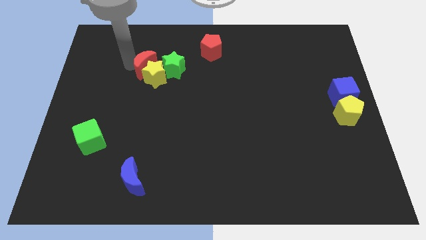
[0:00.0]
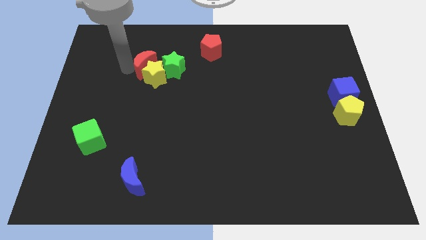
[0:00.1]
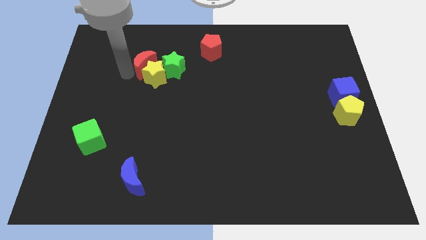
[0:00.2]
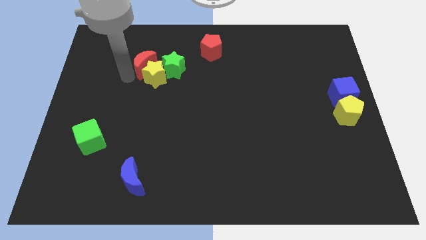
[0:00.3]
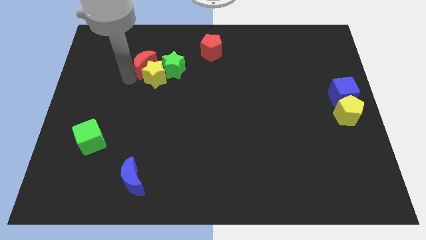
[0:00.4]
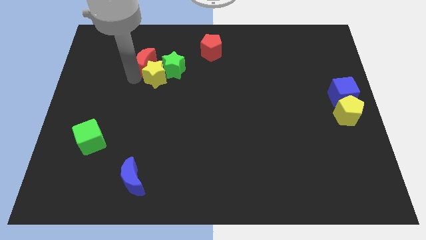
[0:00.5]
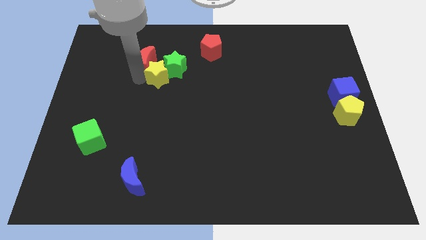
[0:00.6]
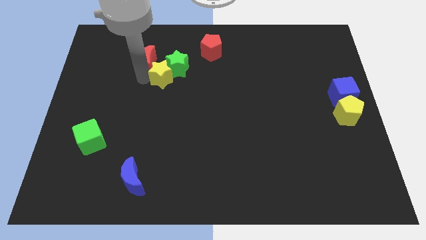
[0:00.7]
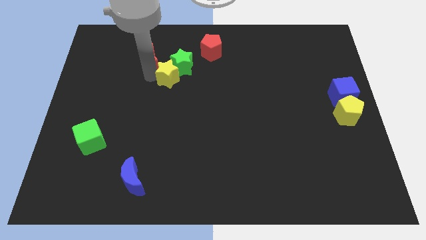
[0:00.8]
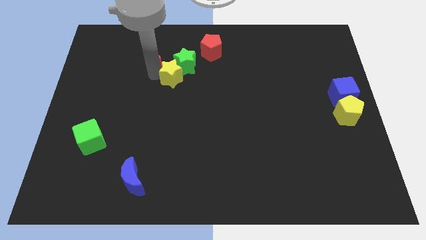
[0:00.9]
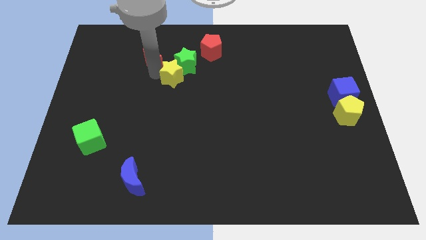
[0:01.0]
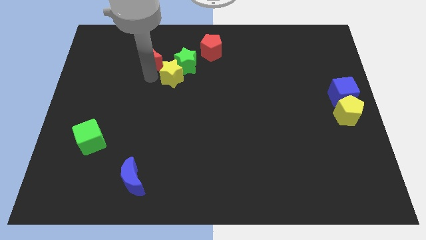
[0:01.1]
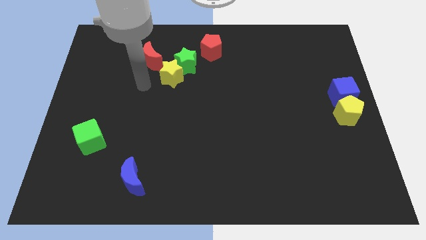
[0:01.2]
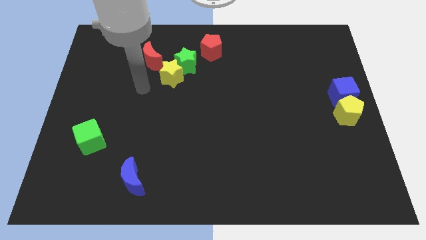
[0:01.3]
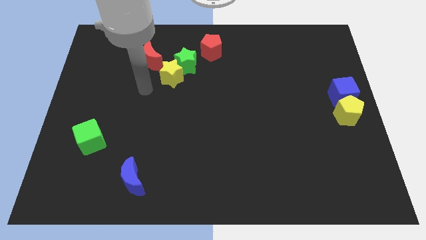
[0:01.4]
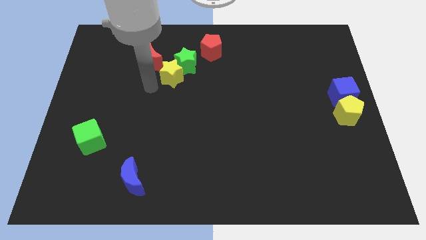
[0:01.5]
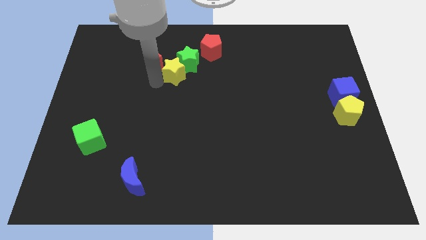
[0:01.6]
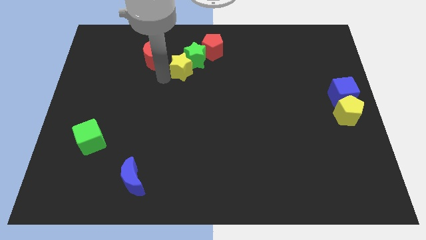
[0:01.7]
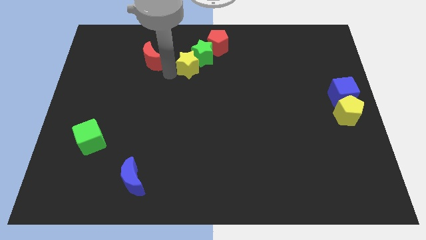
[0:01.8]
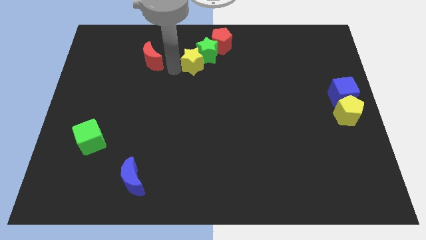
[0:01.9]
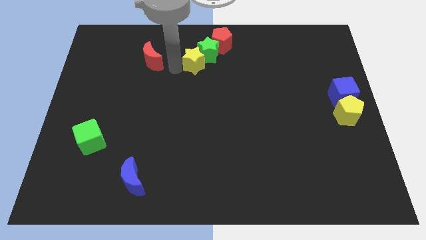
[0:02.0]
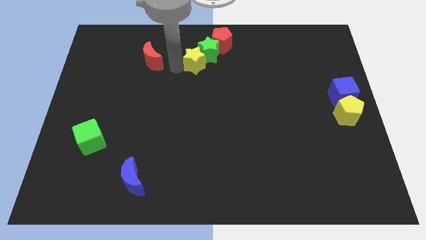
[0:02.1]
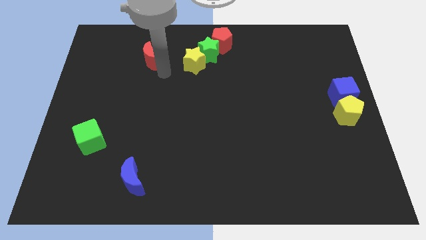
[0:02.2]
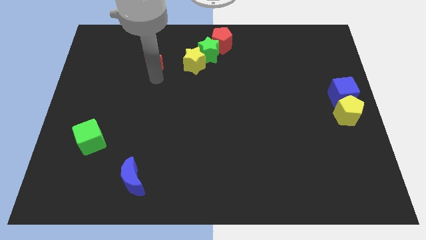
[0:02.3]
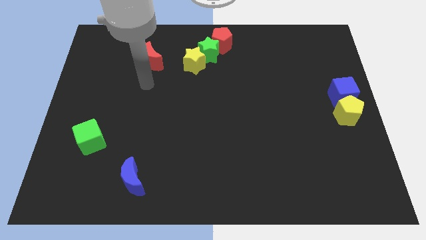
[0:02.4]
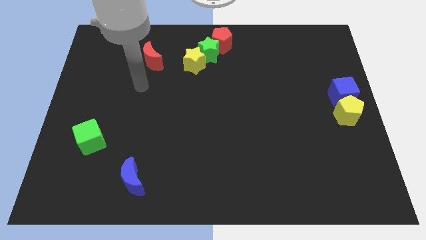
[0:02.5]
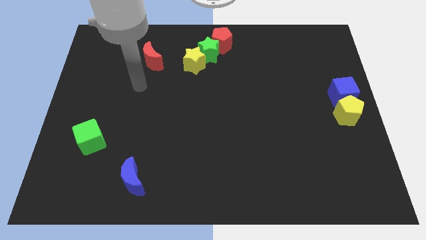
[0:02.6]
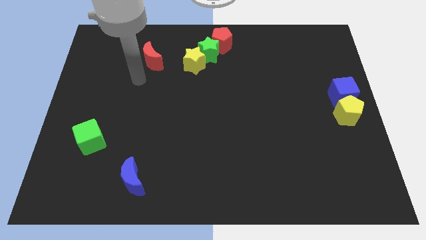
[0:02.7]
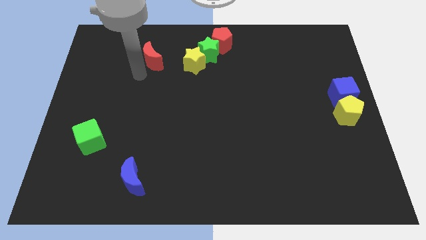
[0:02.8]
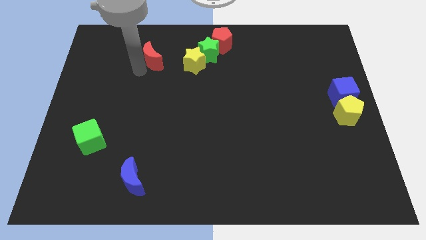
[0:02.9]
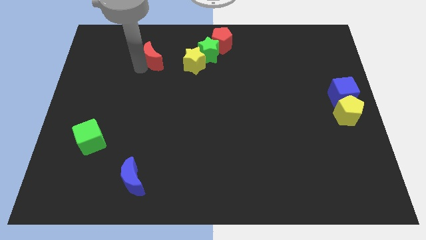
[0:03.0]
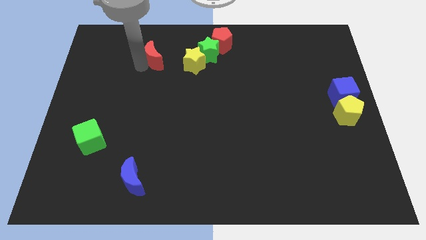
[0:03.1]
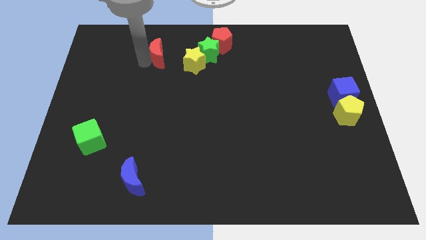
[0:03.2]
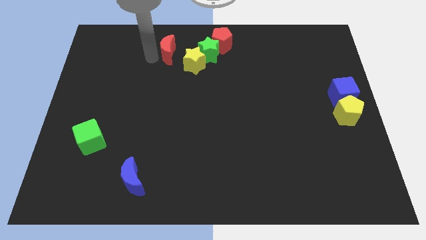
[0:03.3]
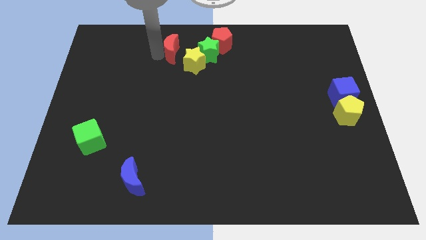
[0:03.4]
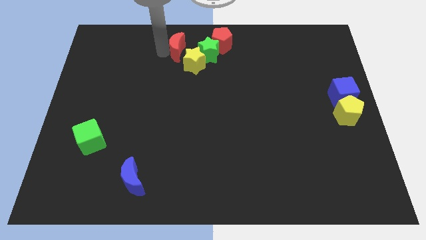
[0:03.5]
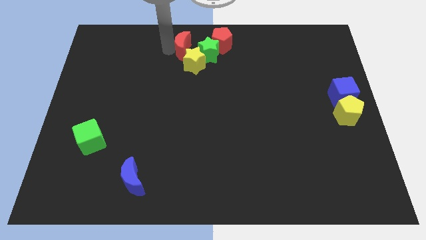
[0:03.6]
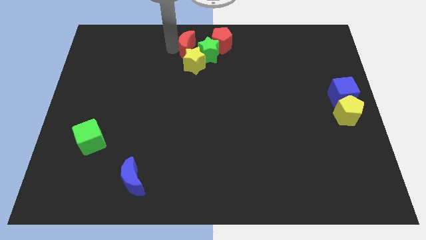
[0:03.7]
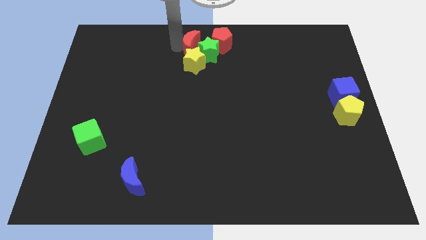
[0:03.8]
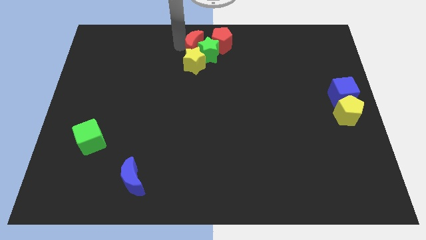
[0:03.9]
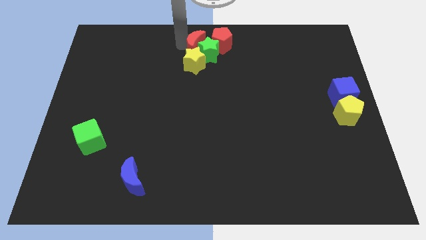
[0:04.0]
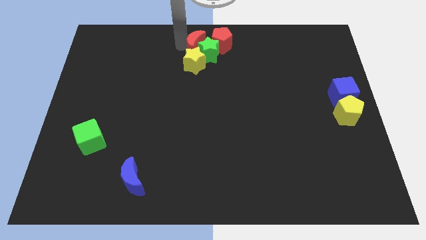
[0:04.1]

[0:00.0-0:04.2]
push the red blocks at the top middle side of the board

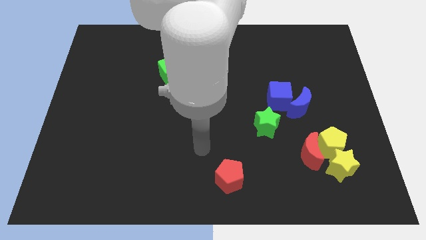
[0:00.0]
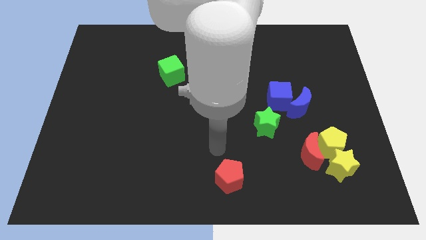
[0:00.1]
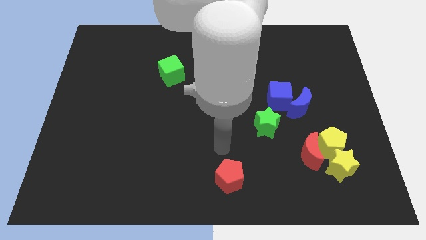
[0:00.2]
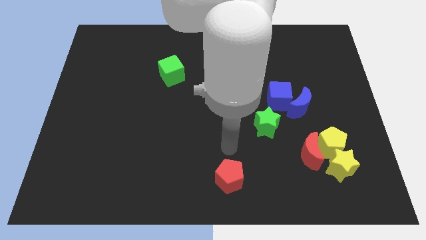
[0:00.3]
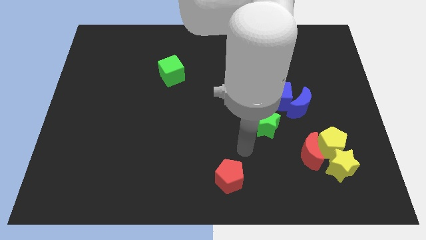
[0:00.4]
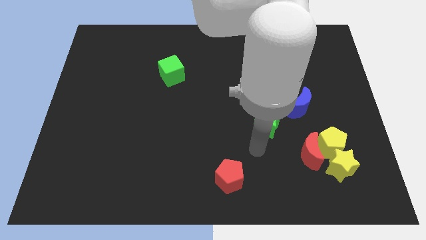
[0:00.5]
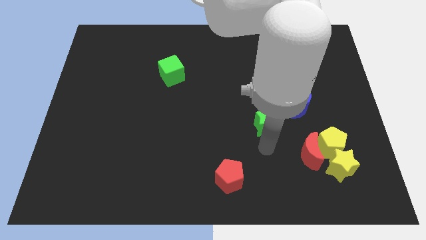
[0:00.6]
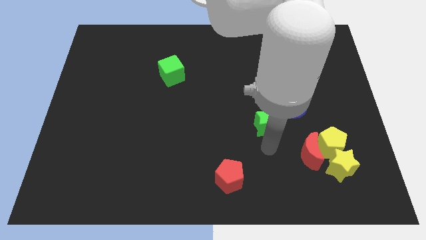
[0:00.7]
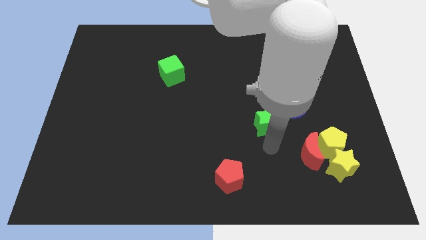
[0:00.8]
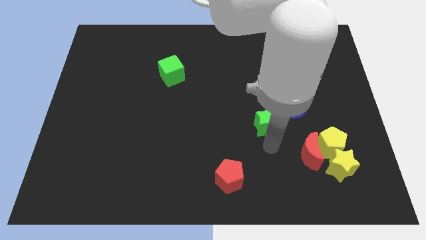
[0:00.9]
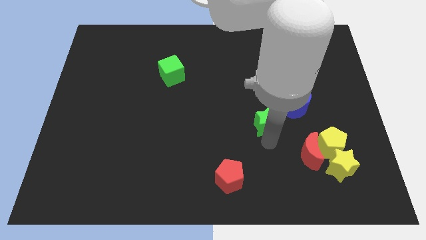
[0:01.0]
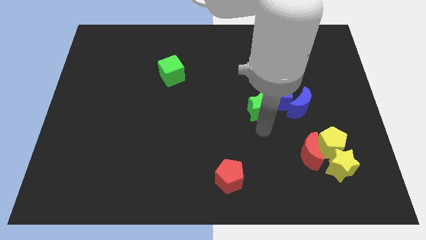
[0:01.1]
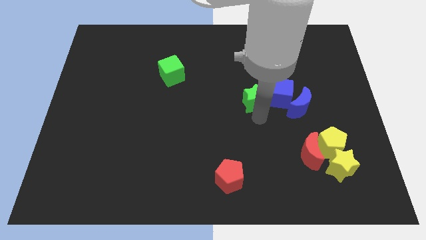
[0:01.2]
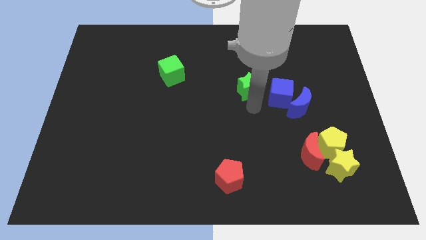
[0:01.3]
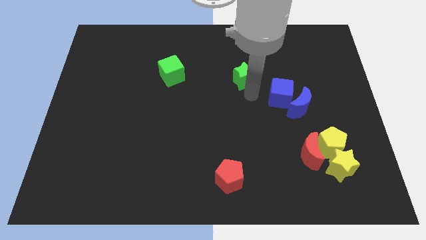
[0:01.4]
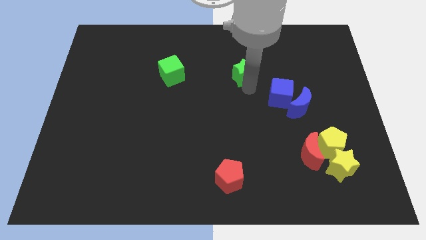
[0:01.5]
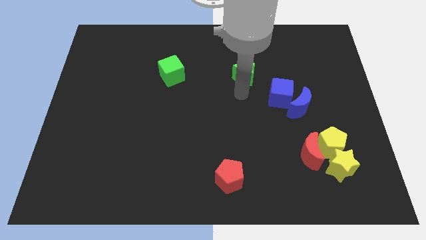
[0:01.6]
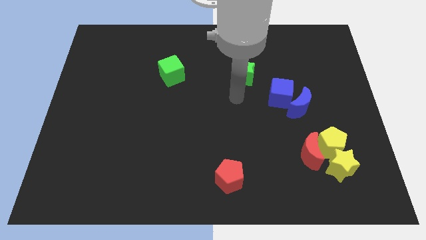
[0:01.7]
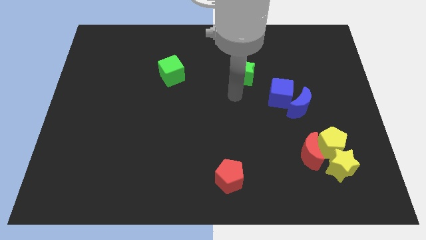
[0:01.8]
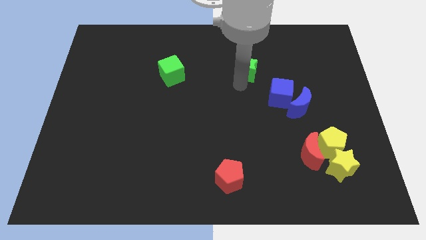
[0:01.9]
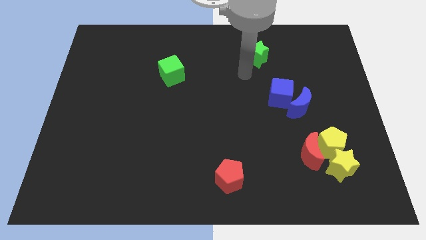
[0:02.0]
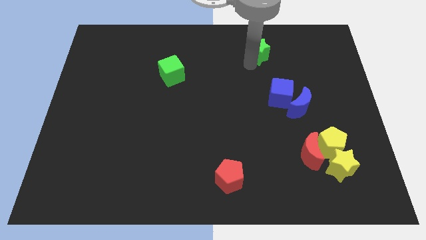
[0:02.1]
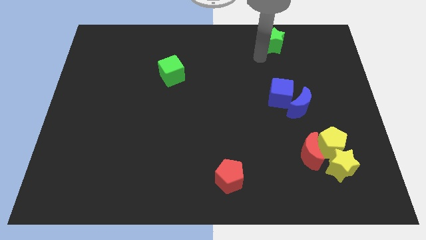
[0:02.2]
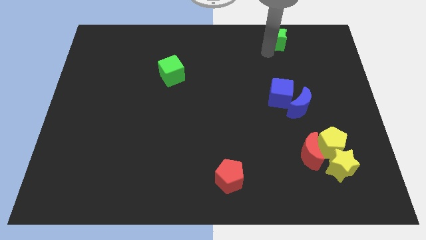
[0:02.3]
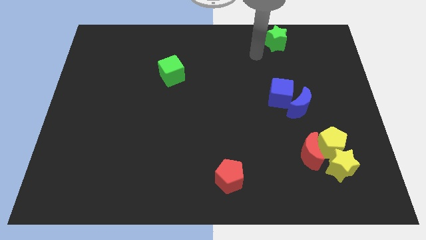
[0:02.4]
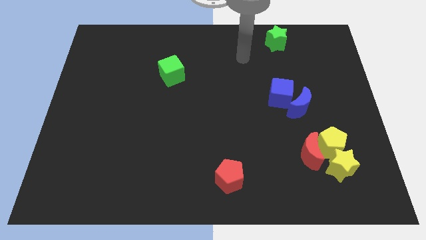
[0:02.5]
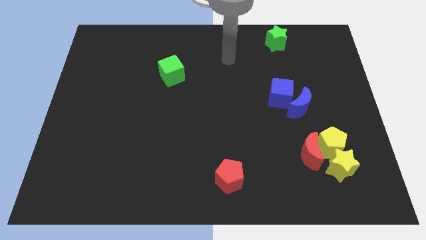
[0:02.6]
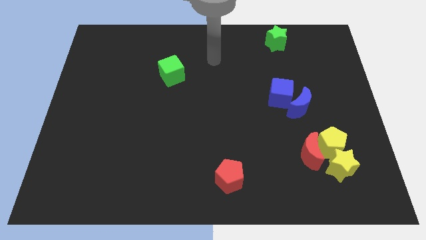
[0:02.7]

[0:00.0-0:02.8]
move the green star diagonal to the green cube

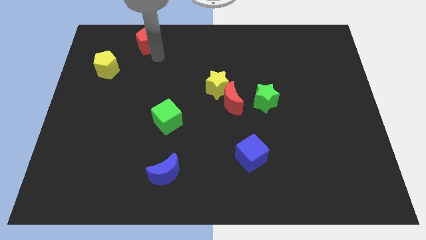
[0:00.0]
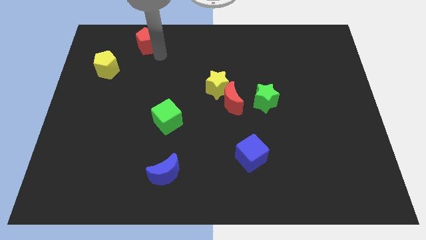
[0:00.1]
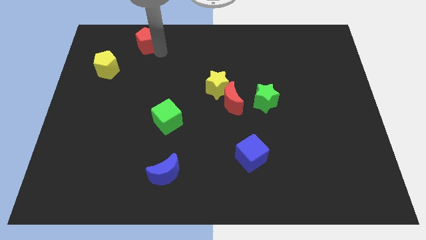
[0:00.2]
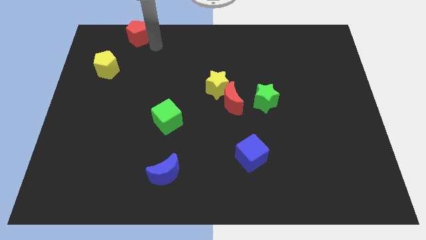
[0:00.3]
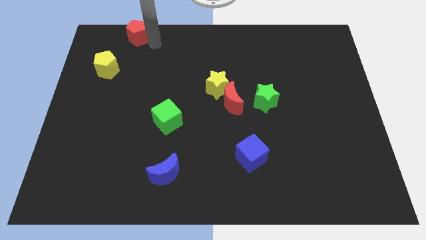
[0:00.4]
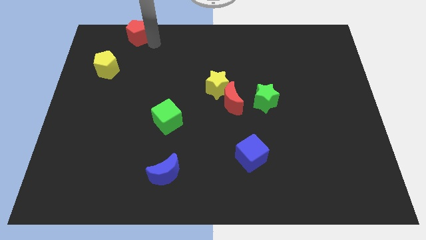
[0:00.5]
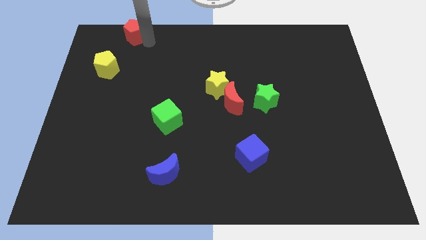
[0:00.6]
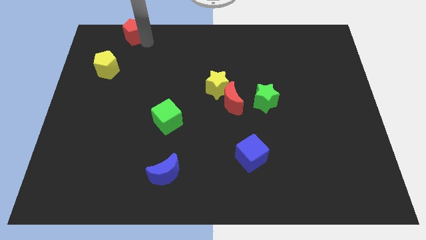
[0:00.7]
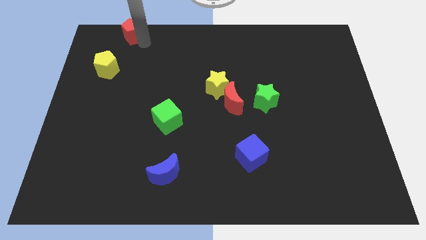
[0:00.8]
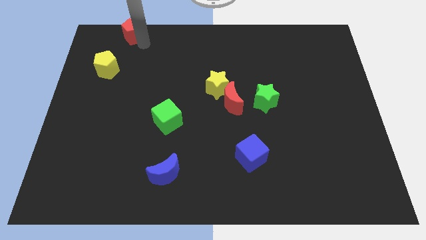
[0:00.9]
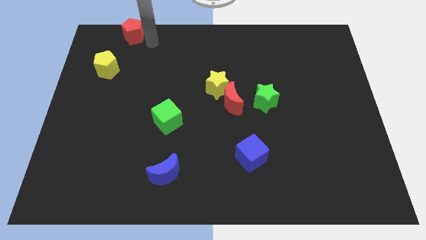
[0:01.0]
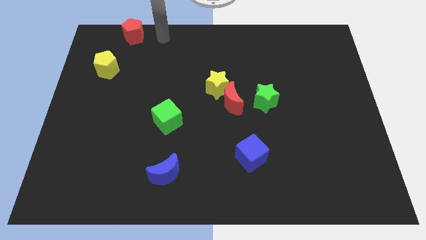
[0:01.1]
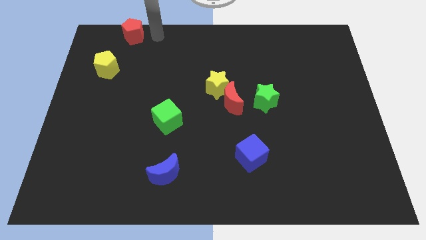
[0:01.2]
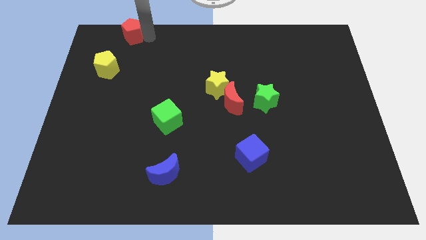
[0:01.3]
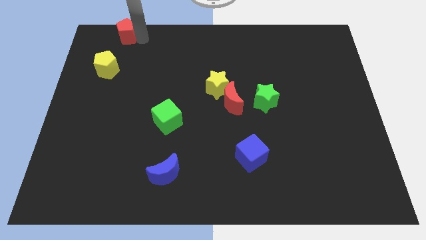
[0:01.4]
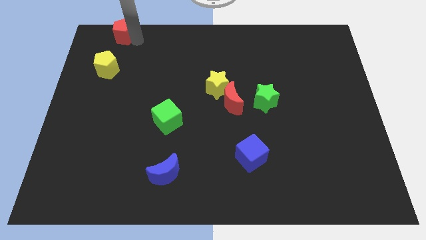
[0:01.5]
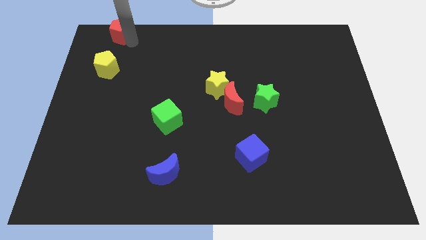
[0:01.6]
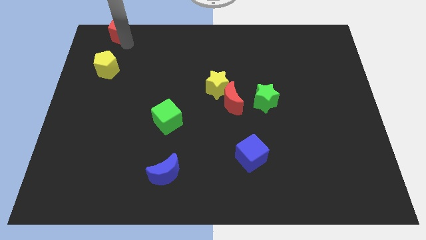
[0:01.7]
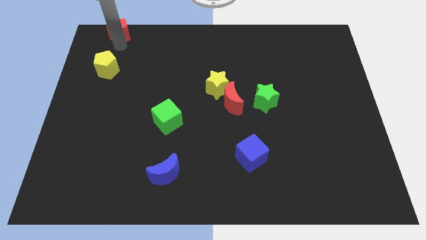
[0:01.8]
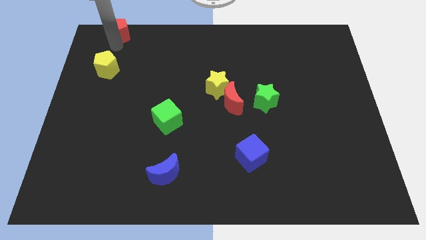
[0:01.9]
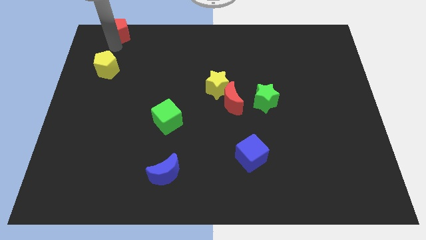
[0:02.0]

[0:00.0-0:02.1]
place red pentagon vertical to yellow pentagon
